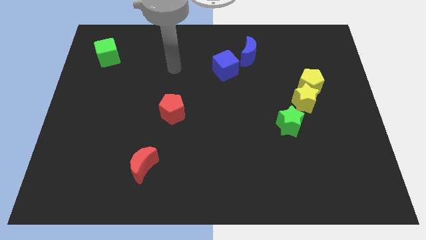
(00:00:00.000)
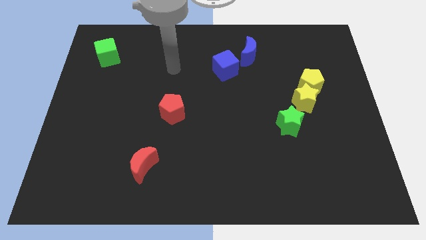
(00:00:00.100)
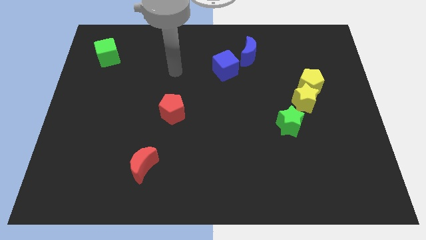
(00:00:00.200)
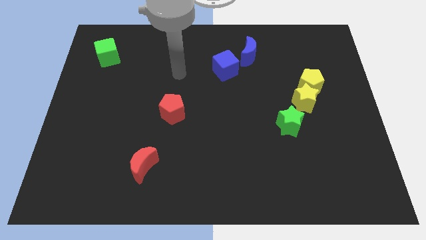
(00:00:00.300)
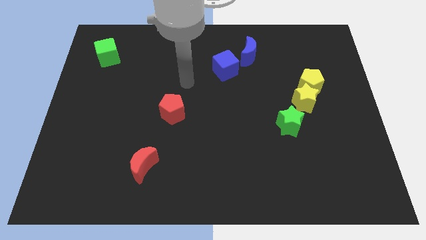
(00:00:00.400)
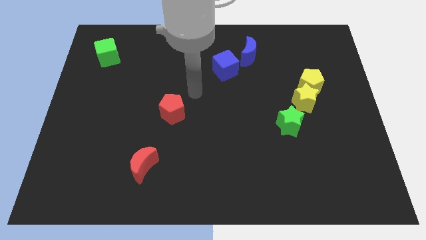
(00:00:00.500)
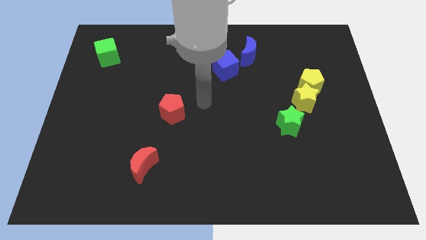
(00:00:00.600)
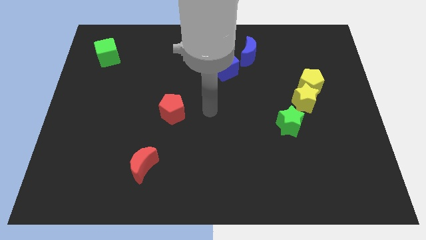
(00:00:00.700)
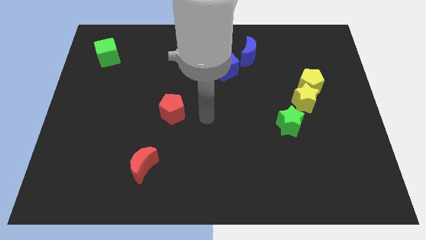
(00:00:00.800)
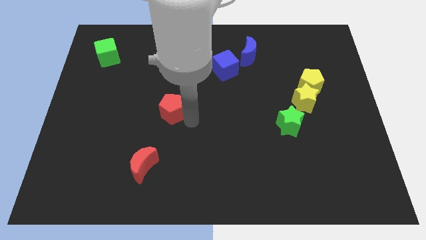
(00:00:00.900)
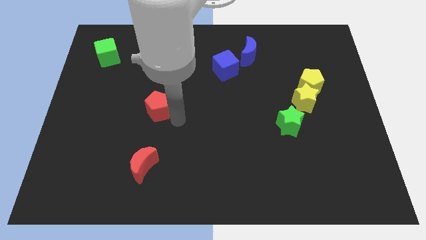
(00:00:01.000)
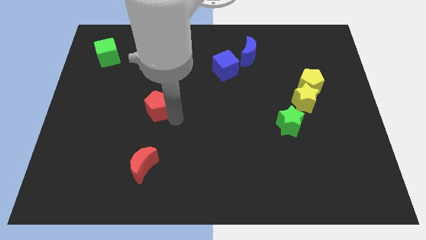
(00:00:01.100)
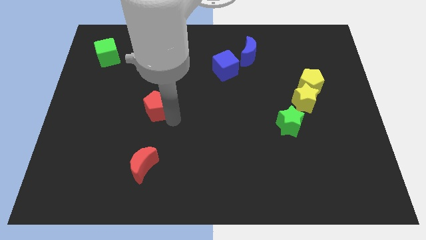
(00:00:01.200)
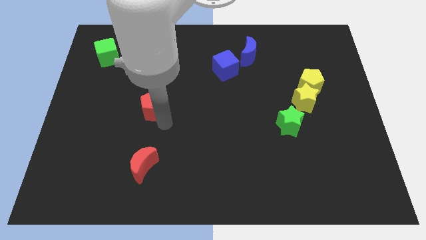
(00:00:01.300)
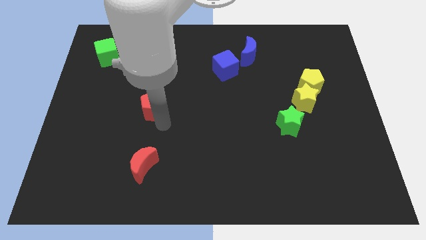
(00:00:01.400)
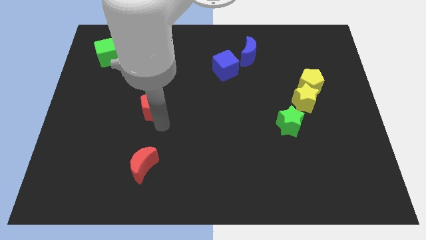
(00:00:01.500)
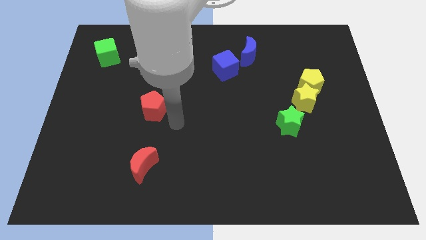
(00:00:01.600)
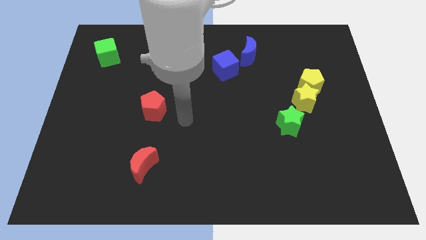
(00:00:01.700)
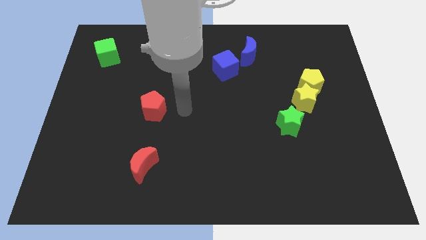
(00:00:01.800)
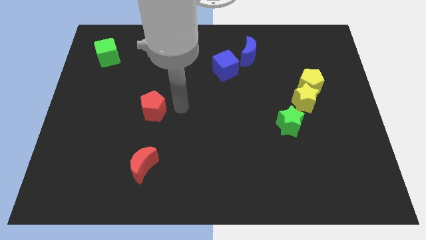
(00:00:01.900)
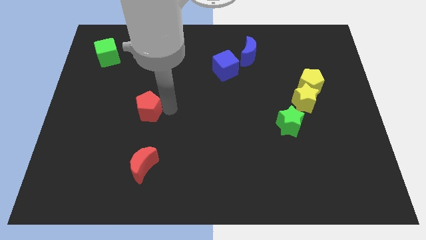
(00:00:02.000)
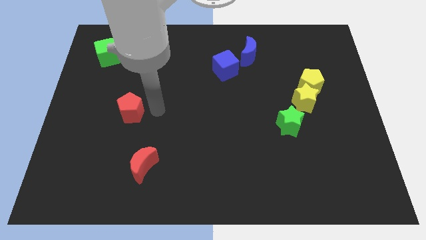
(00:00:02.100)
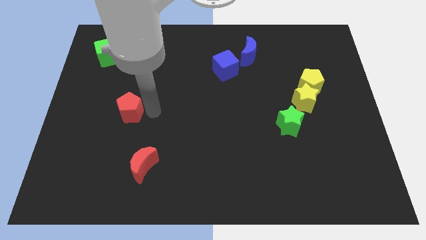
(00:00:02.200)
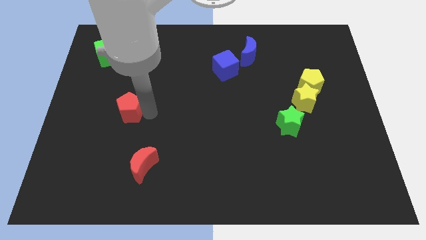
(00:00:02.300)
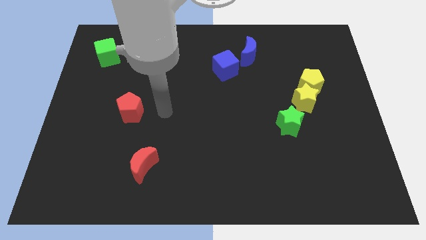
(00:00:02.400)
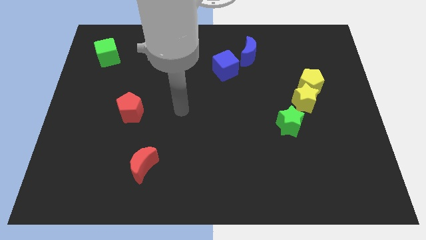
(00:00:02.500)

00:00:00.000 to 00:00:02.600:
push the red pentagon towards the left side slightly

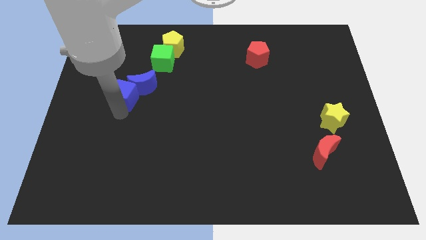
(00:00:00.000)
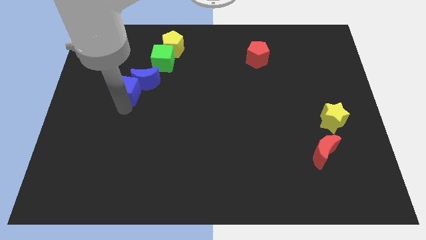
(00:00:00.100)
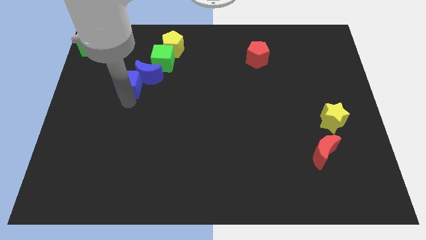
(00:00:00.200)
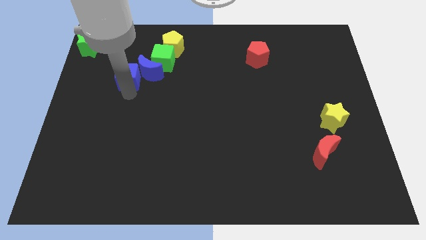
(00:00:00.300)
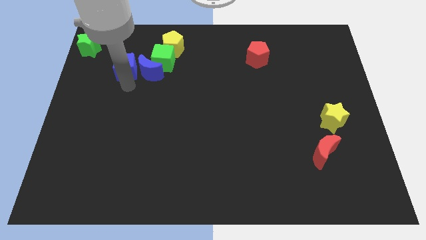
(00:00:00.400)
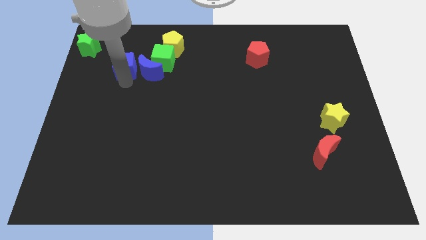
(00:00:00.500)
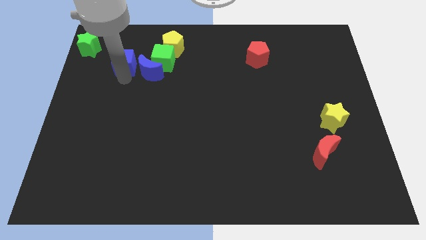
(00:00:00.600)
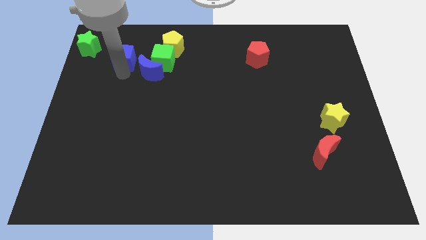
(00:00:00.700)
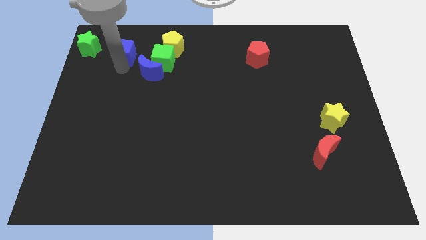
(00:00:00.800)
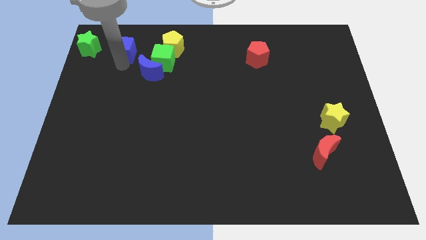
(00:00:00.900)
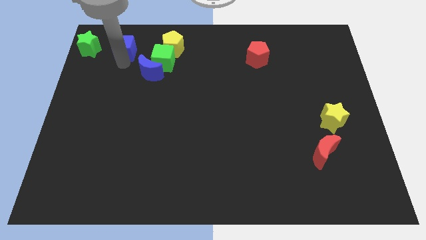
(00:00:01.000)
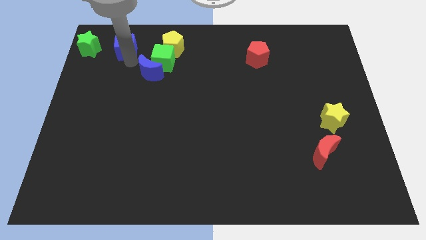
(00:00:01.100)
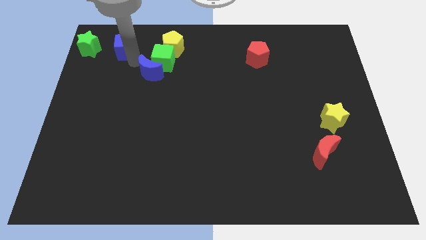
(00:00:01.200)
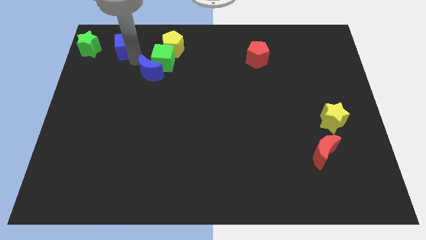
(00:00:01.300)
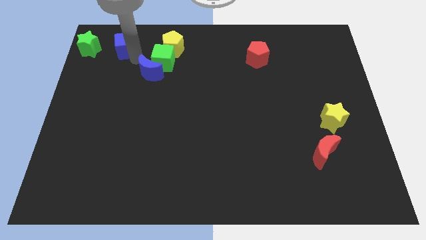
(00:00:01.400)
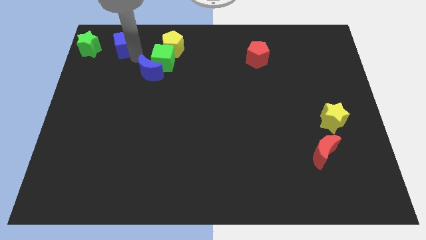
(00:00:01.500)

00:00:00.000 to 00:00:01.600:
move blue cube to the right of green star

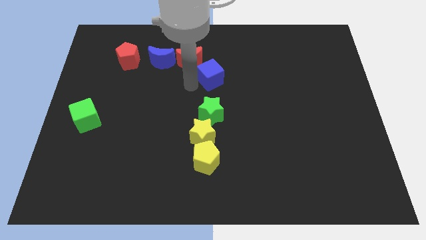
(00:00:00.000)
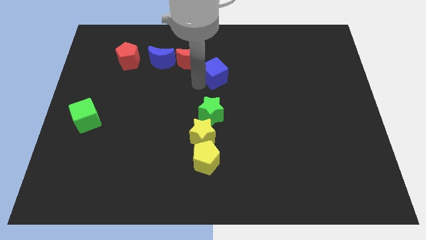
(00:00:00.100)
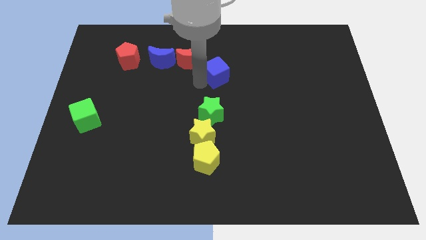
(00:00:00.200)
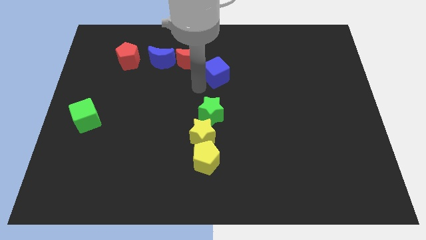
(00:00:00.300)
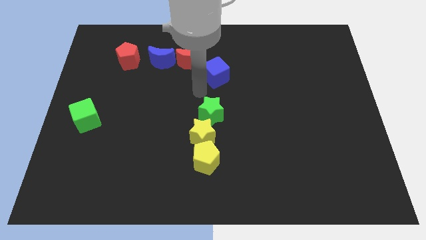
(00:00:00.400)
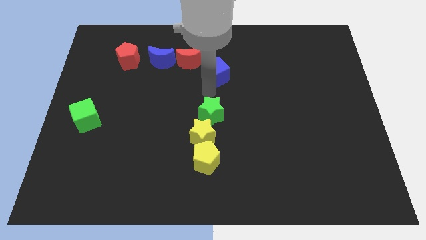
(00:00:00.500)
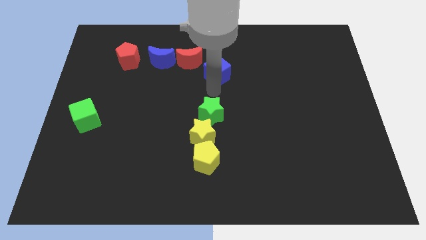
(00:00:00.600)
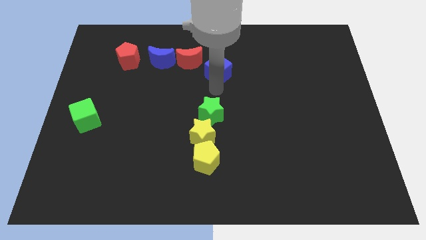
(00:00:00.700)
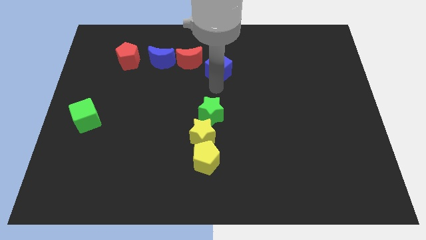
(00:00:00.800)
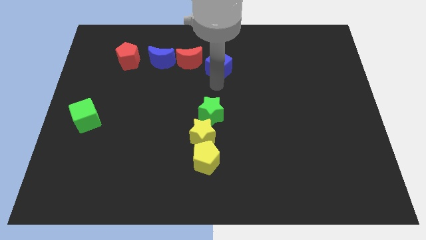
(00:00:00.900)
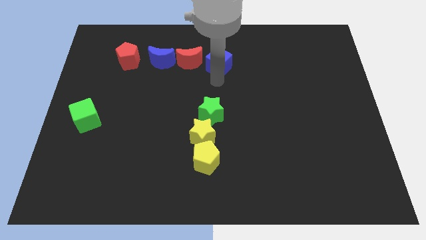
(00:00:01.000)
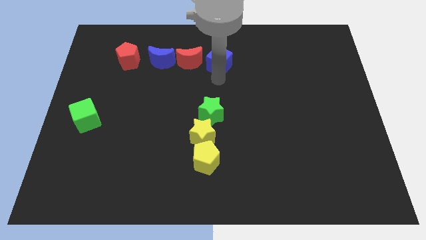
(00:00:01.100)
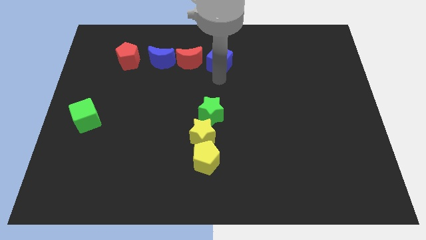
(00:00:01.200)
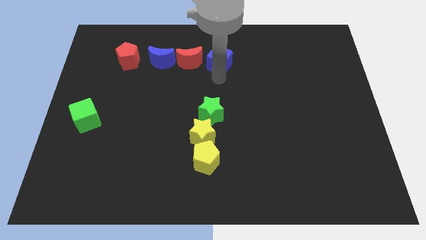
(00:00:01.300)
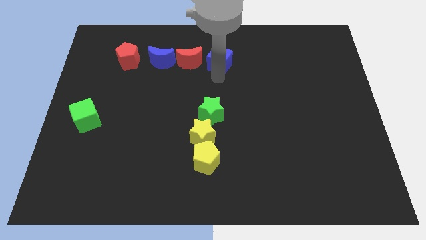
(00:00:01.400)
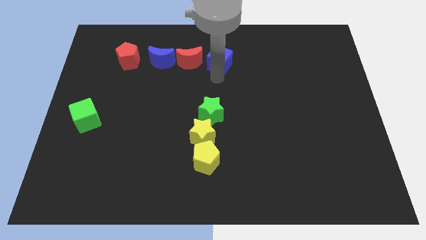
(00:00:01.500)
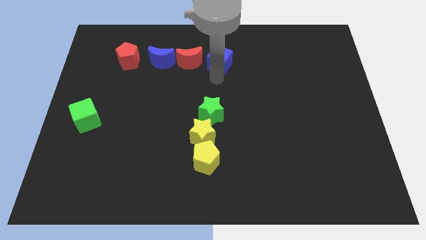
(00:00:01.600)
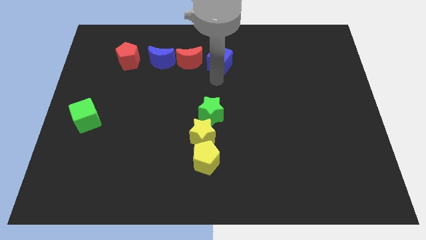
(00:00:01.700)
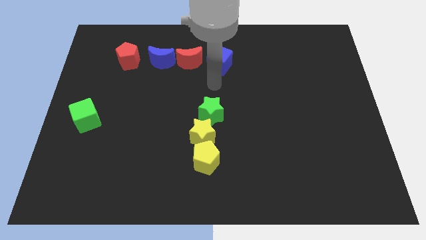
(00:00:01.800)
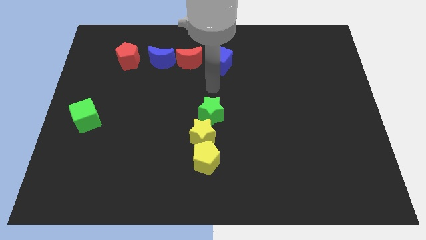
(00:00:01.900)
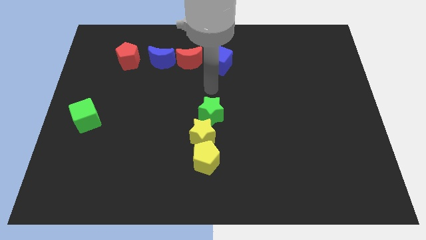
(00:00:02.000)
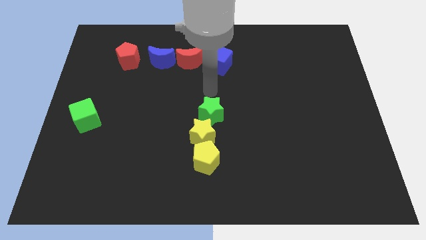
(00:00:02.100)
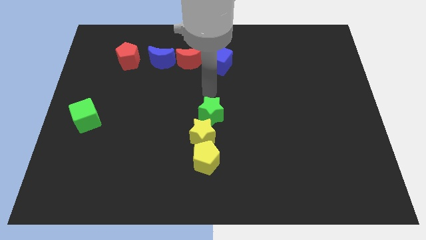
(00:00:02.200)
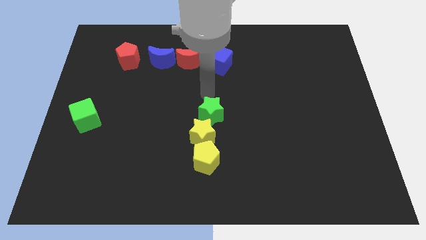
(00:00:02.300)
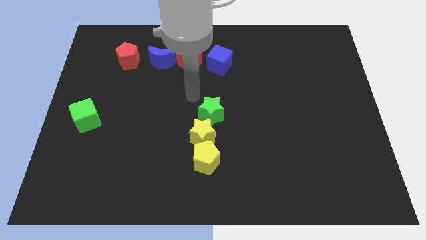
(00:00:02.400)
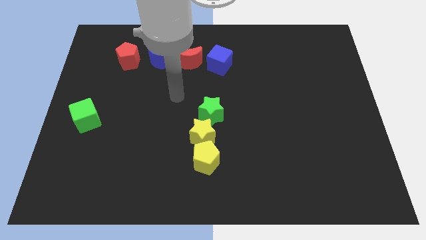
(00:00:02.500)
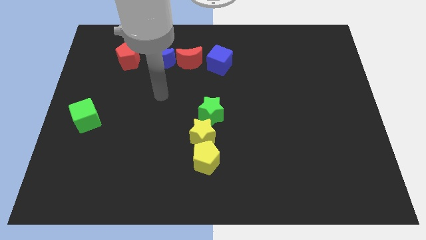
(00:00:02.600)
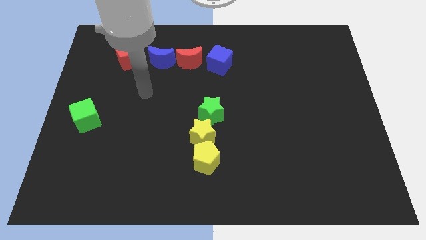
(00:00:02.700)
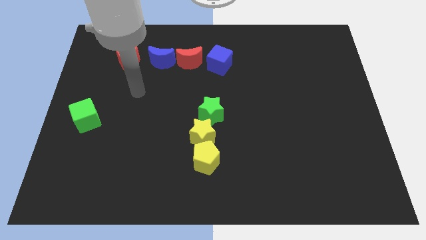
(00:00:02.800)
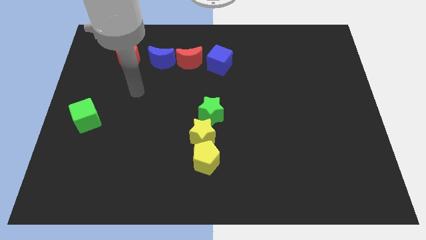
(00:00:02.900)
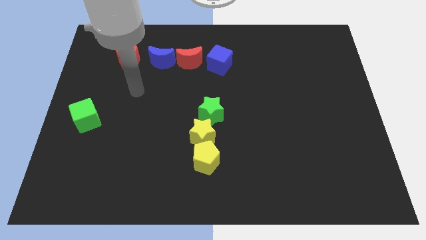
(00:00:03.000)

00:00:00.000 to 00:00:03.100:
put the blue cube to the right of the red crescent

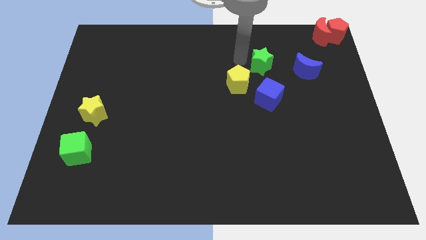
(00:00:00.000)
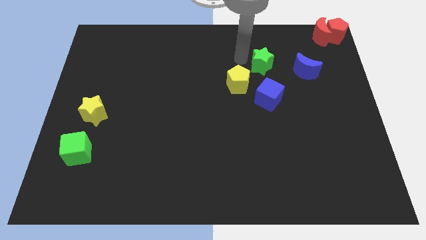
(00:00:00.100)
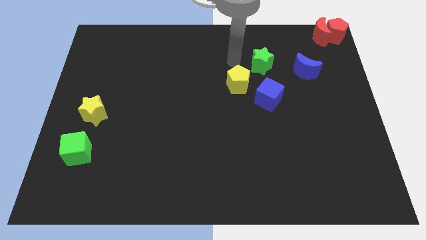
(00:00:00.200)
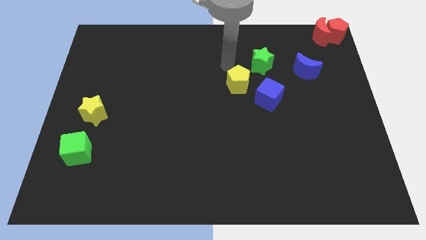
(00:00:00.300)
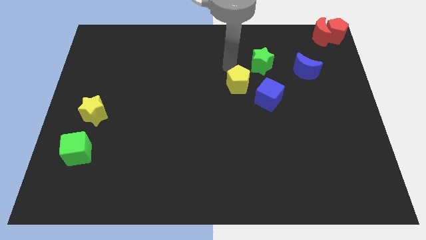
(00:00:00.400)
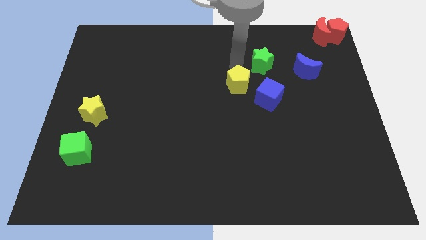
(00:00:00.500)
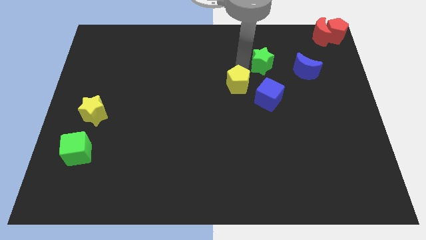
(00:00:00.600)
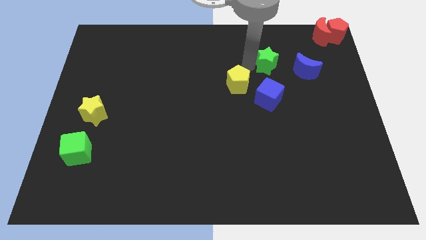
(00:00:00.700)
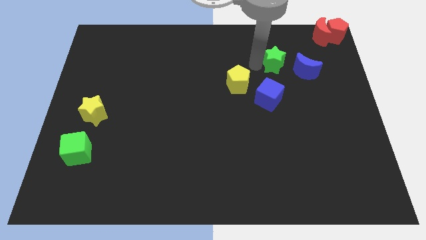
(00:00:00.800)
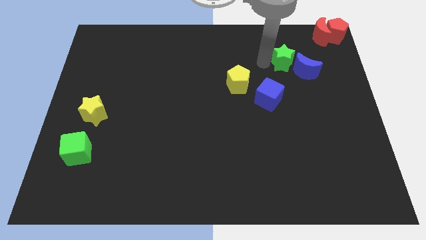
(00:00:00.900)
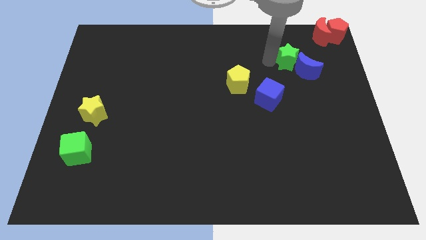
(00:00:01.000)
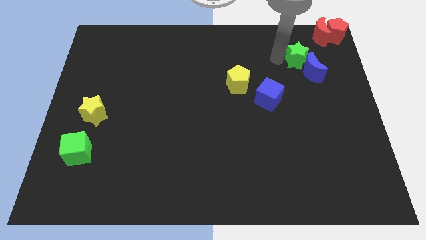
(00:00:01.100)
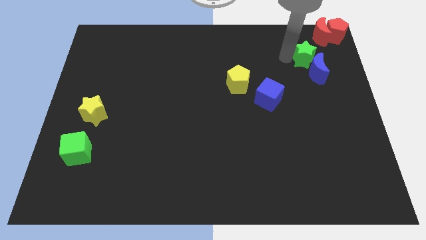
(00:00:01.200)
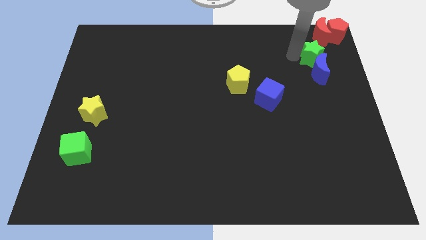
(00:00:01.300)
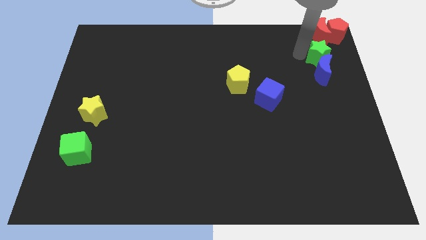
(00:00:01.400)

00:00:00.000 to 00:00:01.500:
push the green star into the blue crescent
